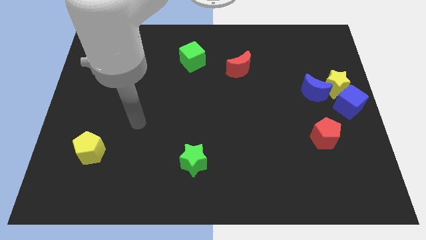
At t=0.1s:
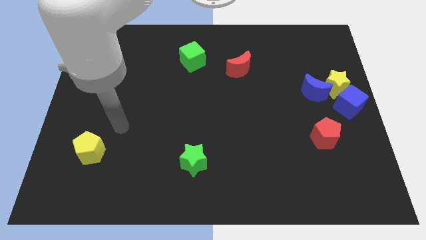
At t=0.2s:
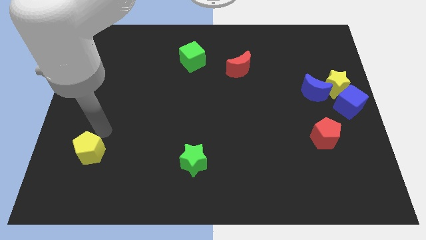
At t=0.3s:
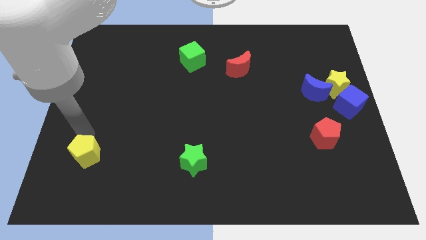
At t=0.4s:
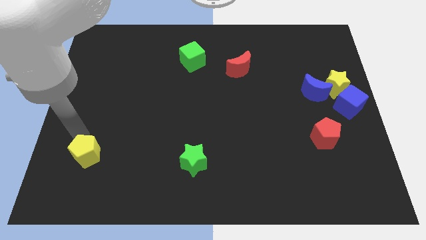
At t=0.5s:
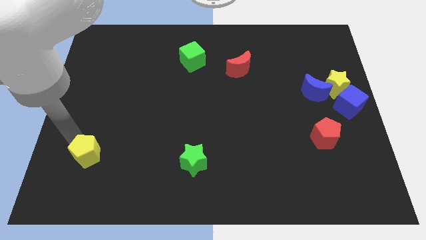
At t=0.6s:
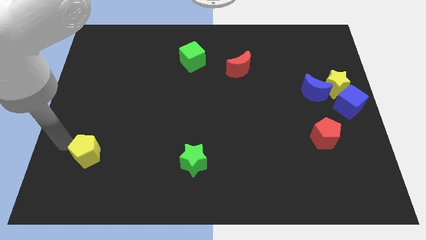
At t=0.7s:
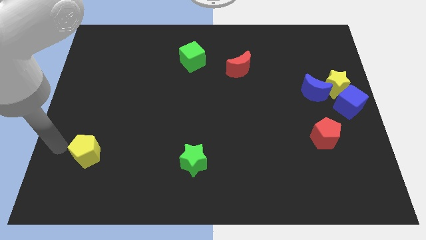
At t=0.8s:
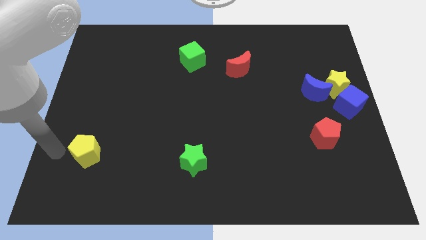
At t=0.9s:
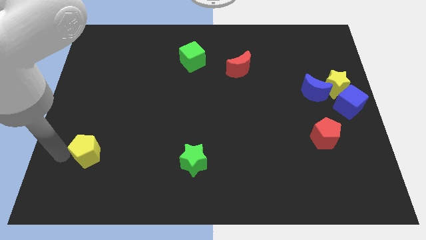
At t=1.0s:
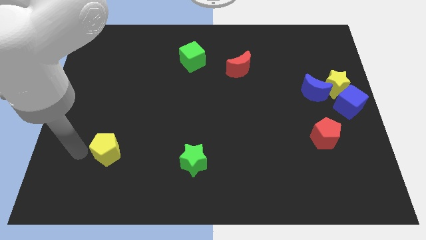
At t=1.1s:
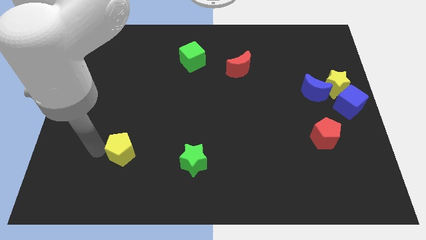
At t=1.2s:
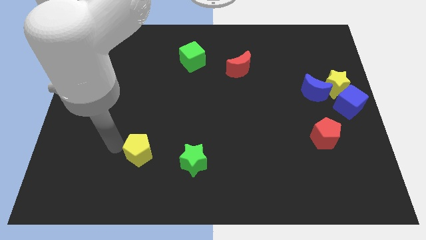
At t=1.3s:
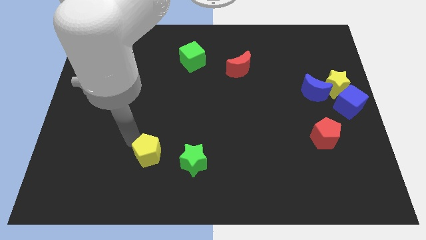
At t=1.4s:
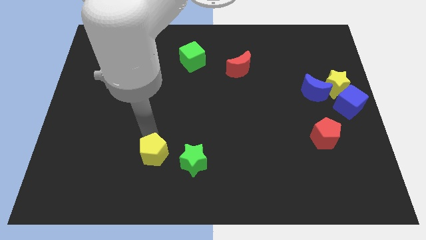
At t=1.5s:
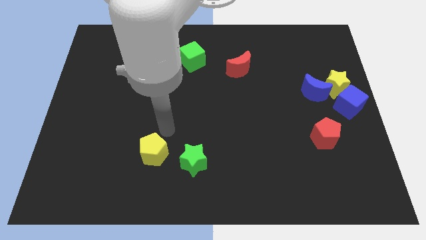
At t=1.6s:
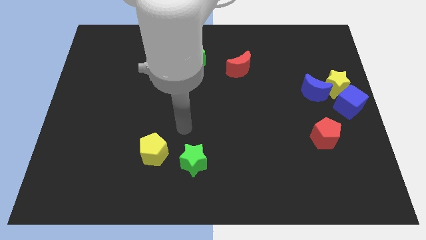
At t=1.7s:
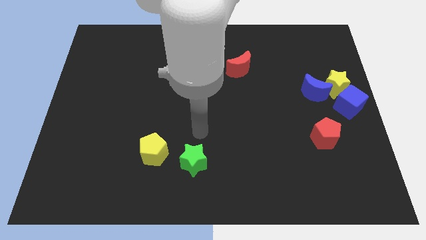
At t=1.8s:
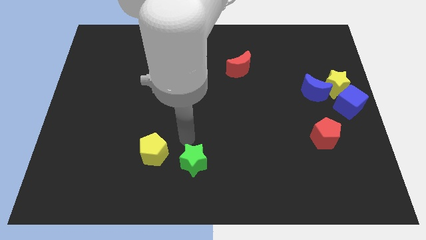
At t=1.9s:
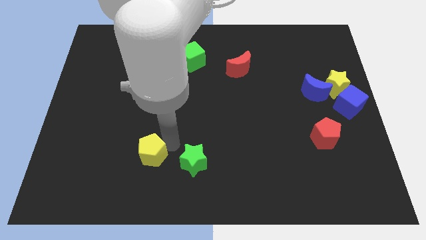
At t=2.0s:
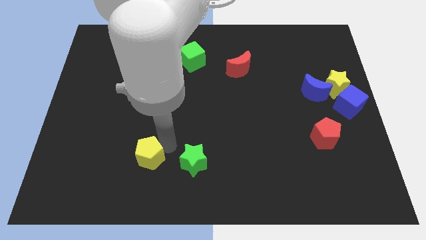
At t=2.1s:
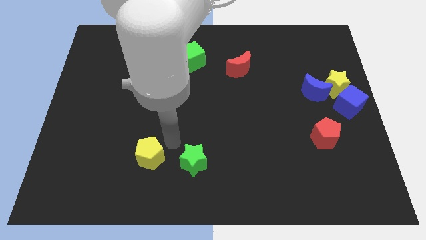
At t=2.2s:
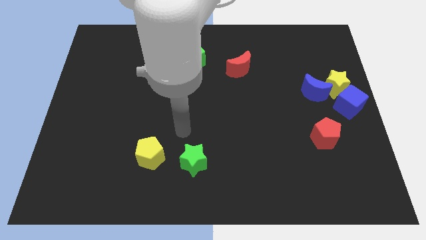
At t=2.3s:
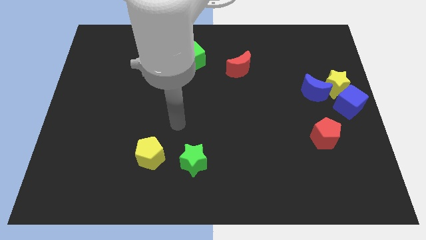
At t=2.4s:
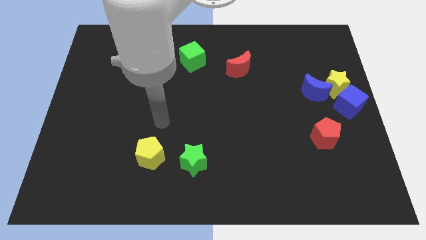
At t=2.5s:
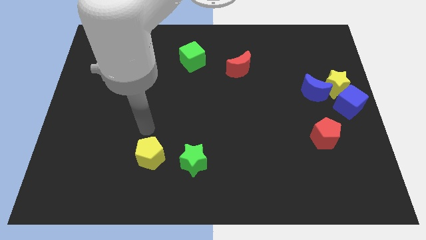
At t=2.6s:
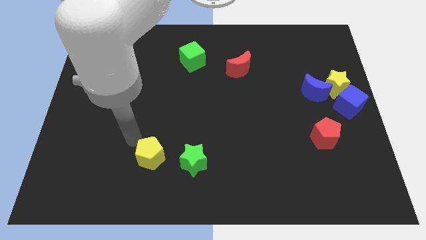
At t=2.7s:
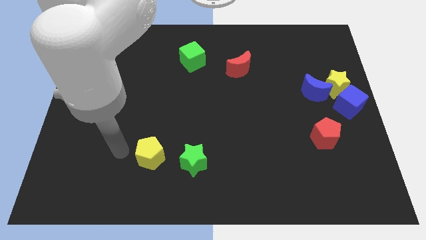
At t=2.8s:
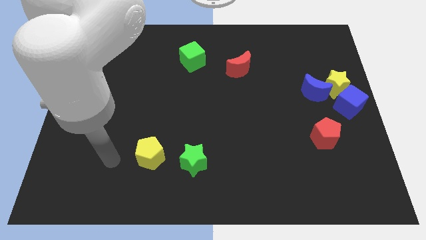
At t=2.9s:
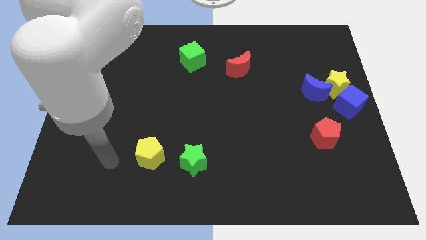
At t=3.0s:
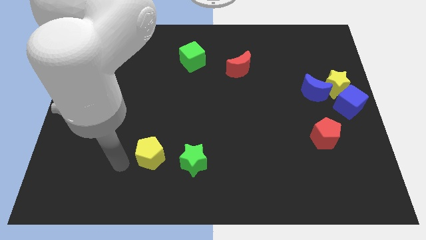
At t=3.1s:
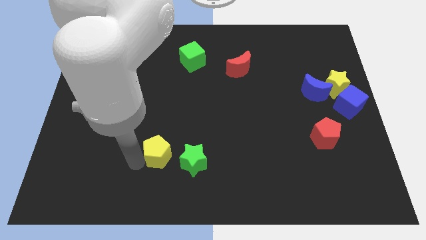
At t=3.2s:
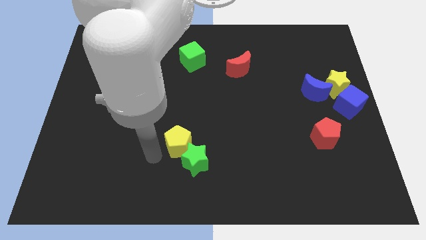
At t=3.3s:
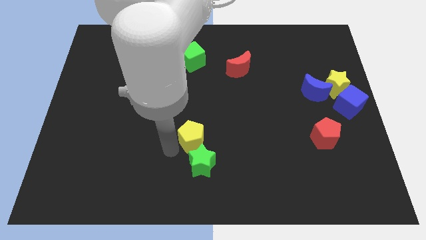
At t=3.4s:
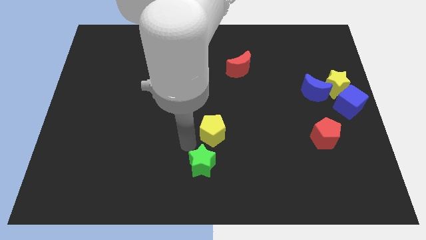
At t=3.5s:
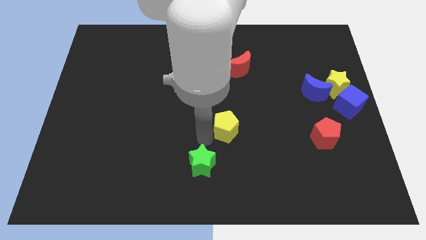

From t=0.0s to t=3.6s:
push the yellow pentagon above the green star

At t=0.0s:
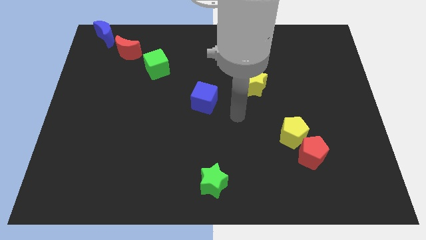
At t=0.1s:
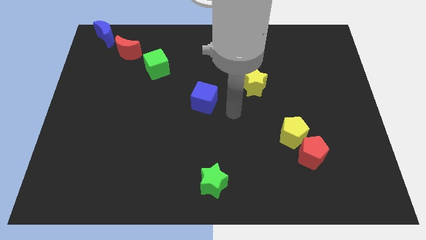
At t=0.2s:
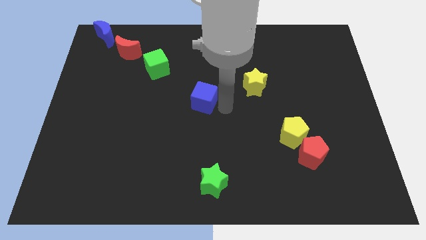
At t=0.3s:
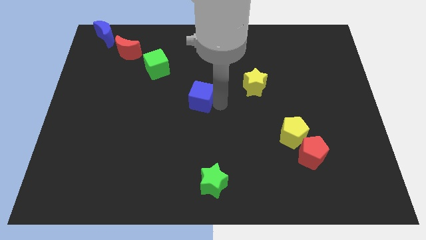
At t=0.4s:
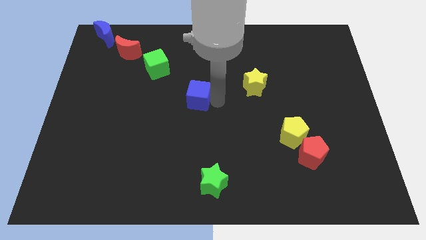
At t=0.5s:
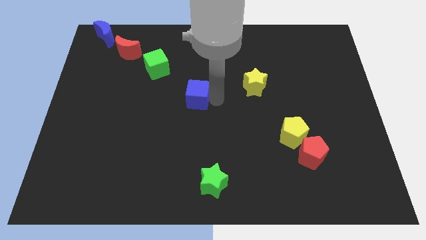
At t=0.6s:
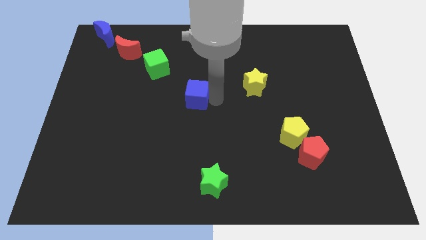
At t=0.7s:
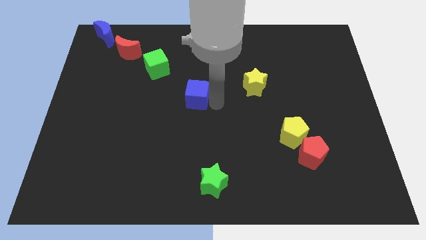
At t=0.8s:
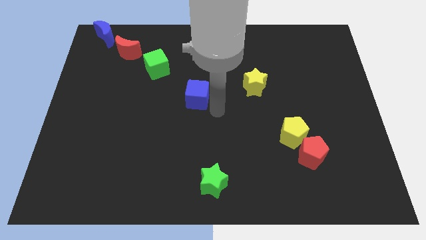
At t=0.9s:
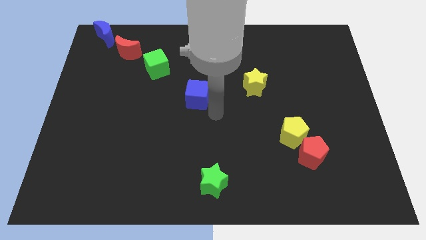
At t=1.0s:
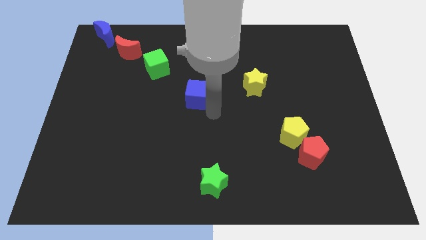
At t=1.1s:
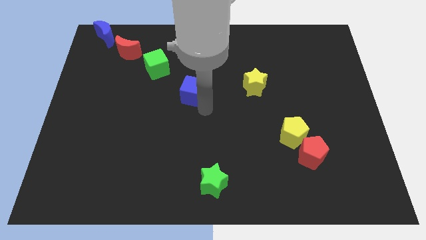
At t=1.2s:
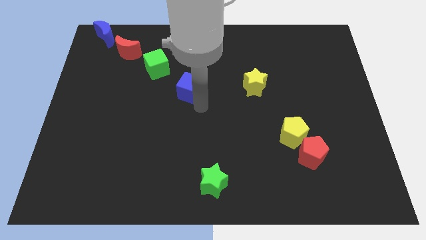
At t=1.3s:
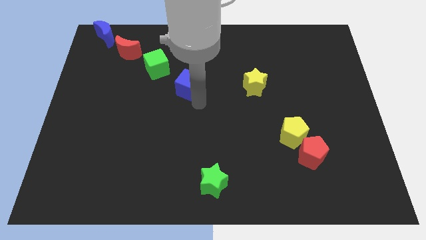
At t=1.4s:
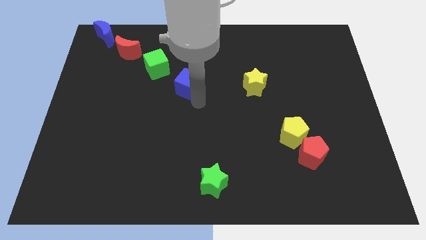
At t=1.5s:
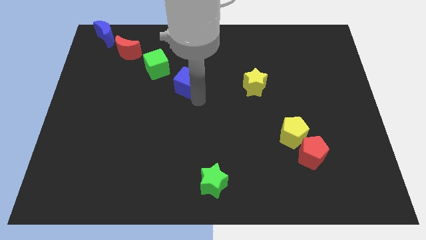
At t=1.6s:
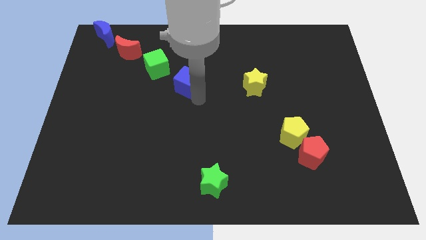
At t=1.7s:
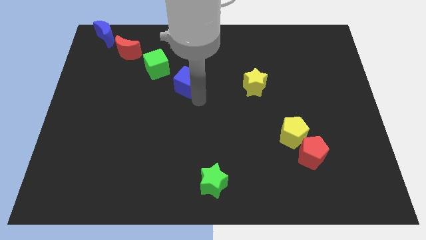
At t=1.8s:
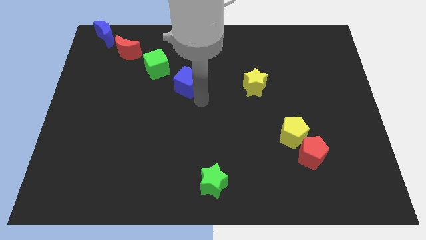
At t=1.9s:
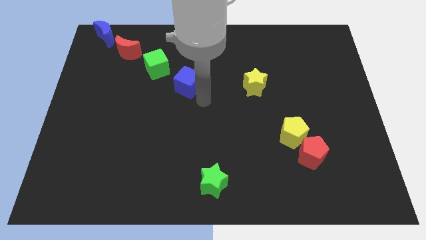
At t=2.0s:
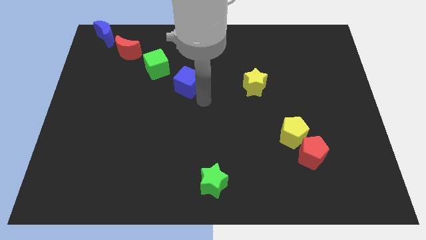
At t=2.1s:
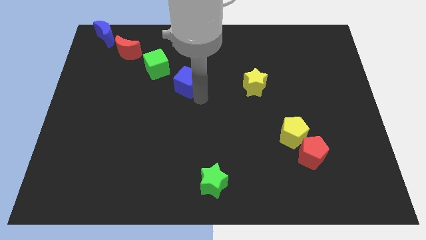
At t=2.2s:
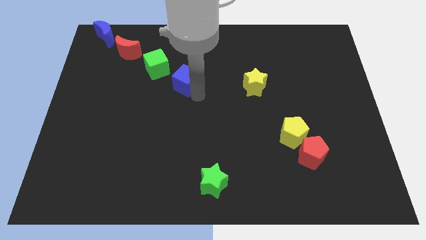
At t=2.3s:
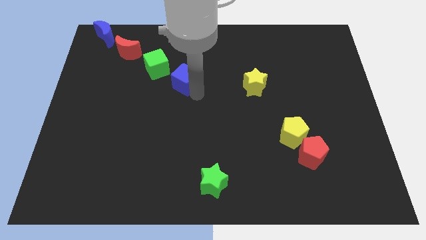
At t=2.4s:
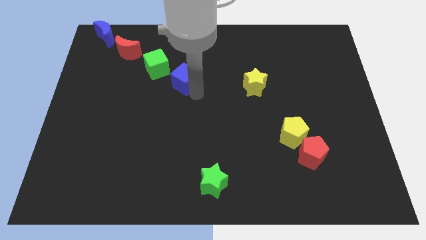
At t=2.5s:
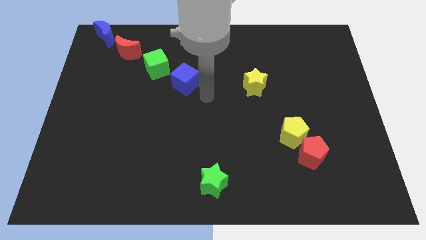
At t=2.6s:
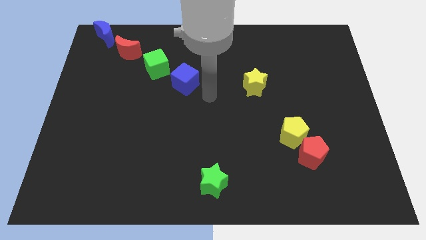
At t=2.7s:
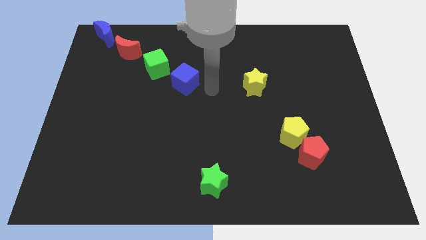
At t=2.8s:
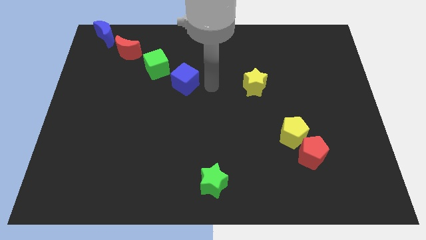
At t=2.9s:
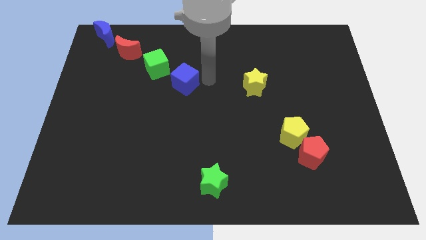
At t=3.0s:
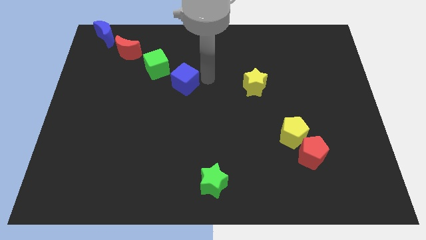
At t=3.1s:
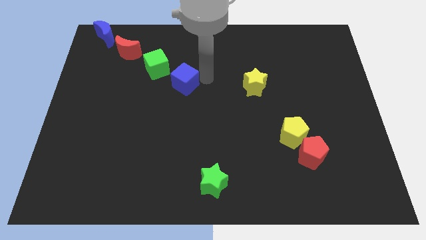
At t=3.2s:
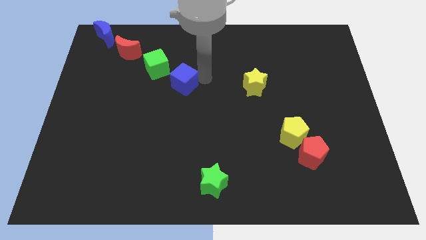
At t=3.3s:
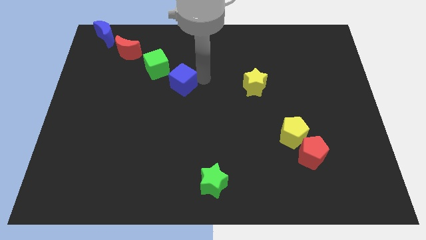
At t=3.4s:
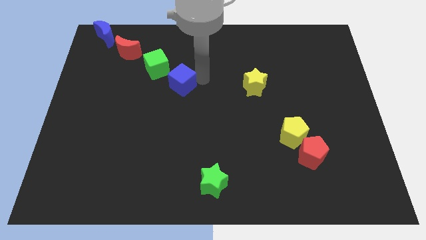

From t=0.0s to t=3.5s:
place blue cube bottom right to green cube

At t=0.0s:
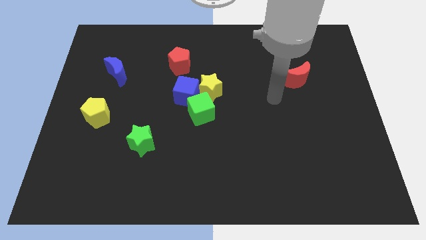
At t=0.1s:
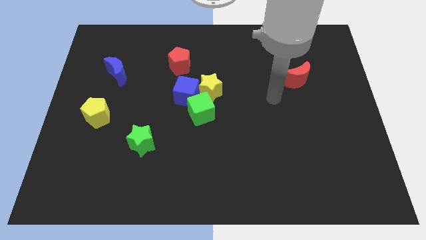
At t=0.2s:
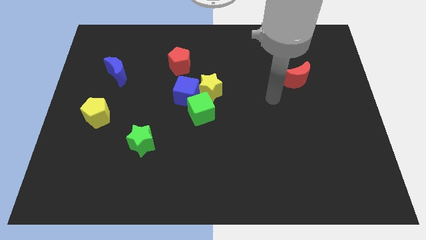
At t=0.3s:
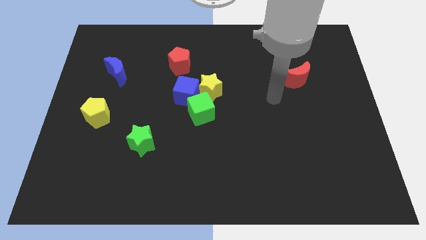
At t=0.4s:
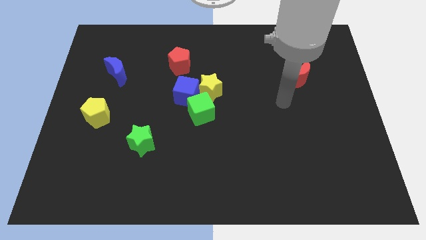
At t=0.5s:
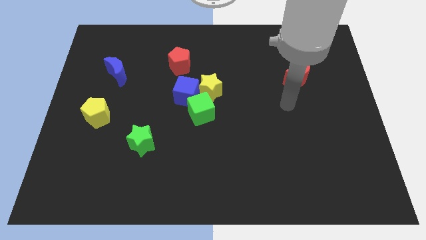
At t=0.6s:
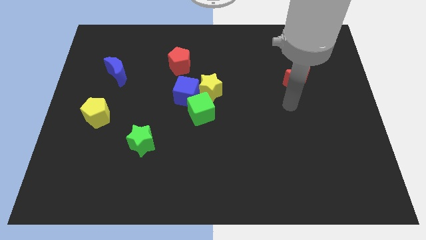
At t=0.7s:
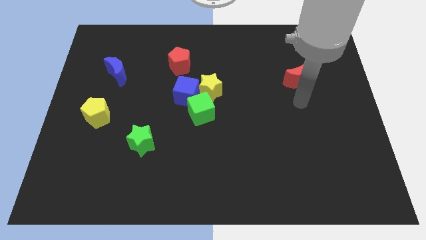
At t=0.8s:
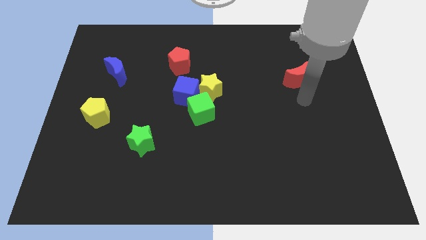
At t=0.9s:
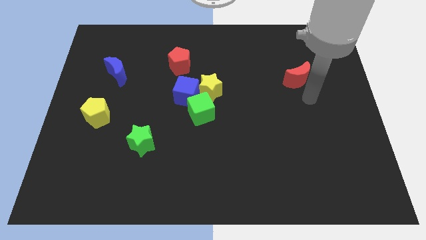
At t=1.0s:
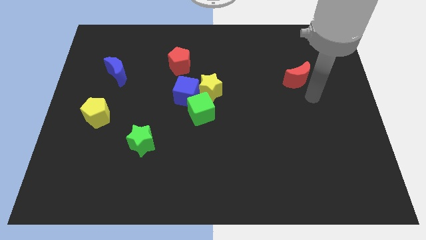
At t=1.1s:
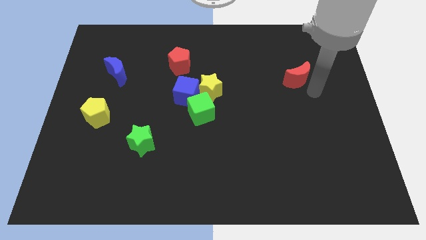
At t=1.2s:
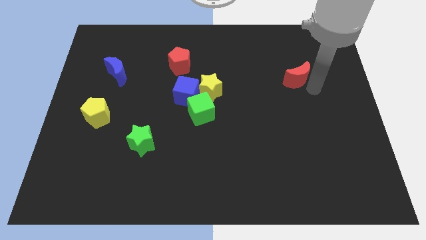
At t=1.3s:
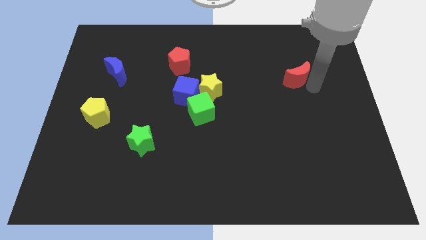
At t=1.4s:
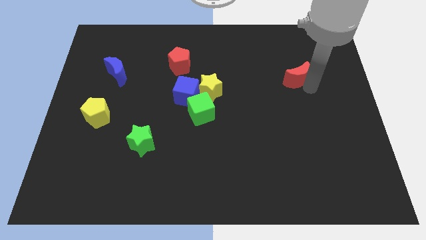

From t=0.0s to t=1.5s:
place your arm to the right of the red moon

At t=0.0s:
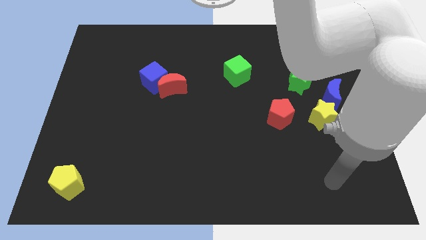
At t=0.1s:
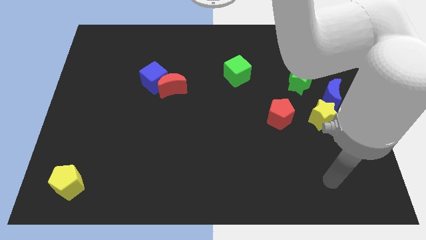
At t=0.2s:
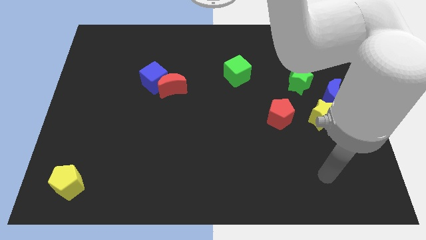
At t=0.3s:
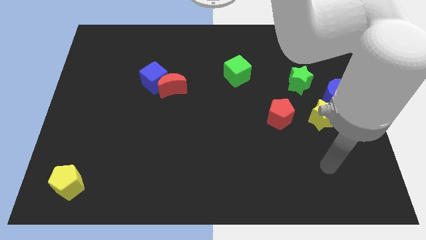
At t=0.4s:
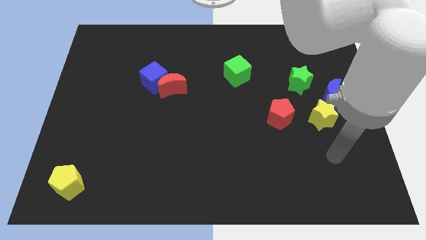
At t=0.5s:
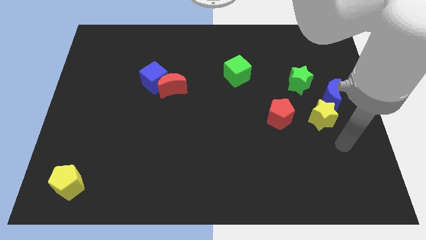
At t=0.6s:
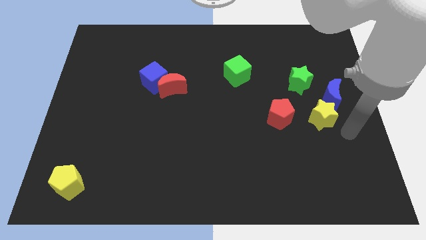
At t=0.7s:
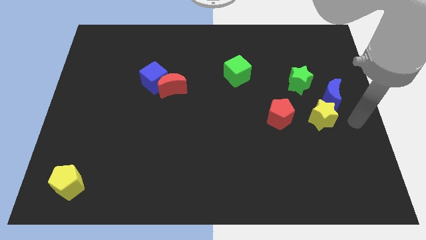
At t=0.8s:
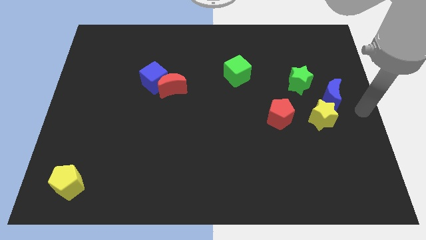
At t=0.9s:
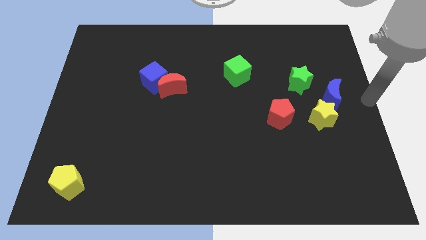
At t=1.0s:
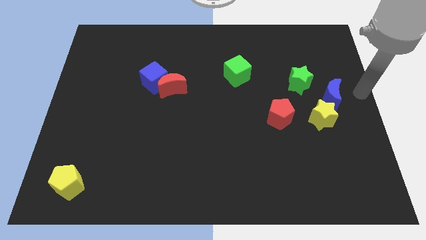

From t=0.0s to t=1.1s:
go and point your hand at the center right
